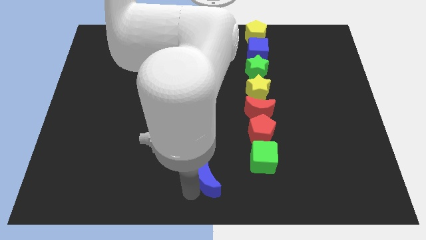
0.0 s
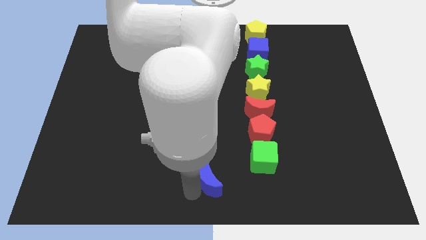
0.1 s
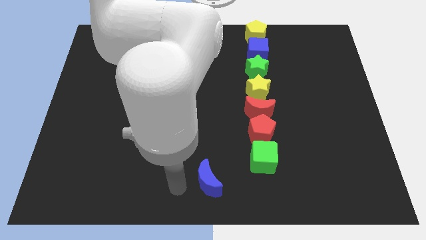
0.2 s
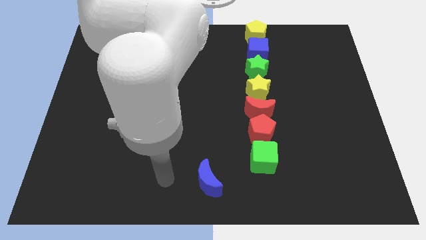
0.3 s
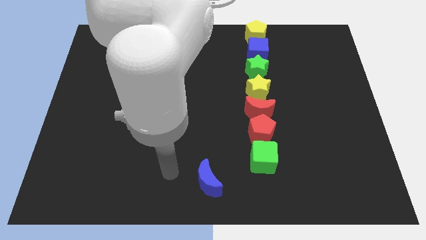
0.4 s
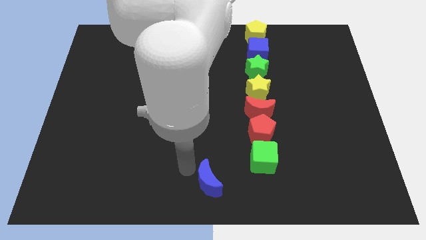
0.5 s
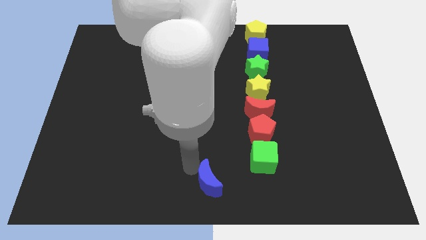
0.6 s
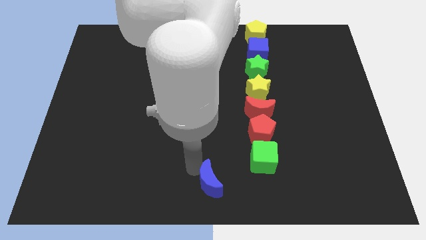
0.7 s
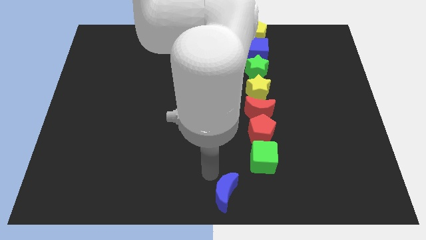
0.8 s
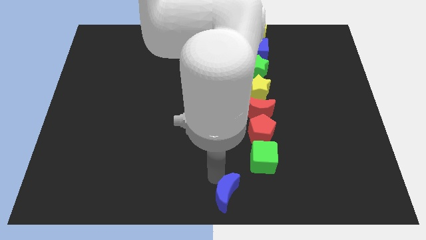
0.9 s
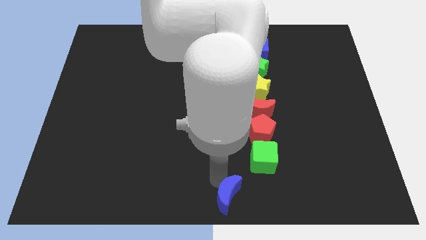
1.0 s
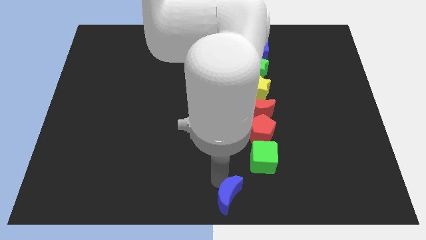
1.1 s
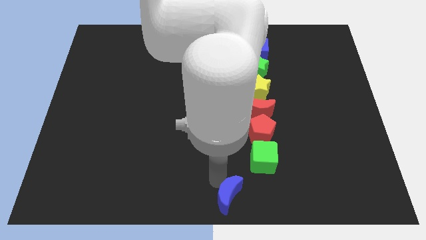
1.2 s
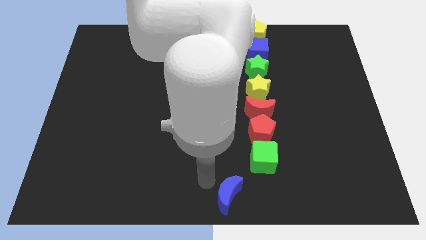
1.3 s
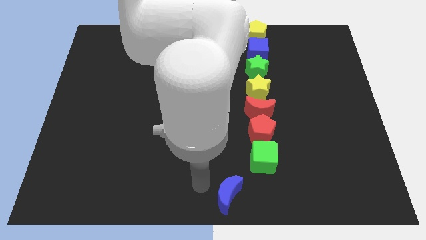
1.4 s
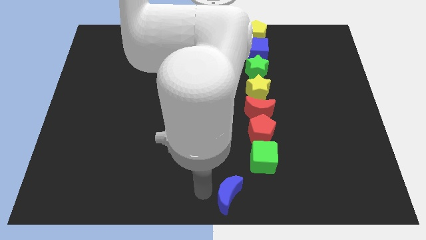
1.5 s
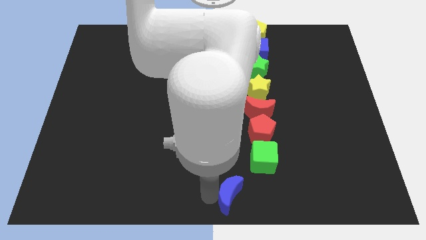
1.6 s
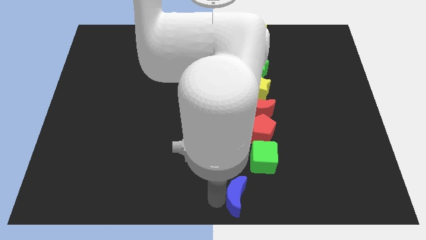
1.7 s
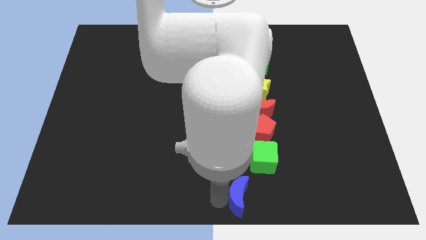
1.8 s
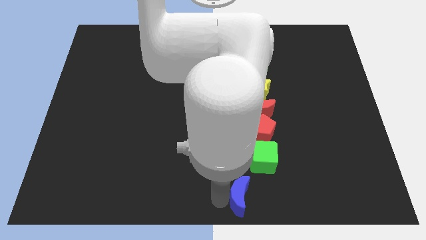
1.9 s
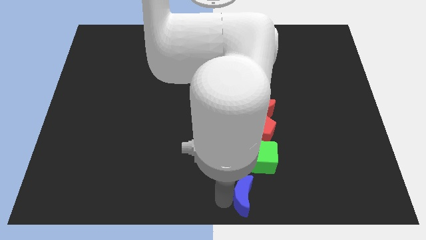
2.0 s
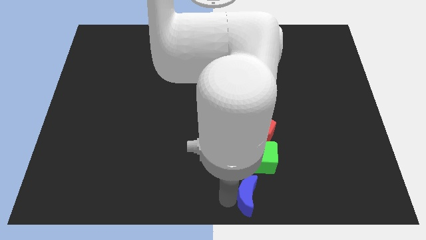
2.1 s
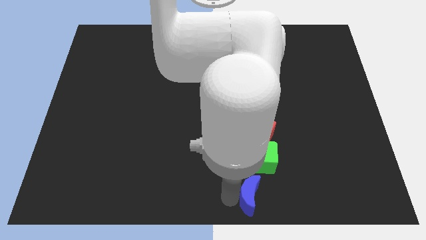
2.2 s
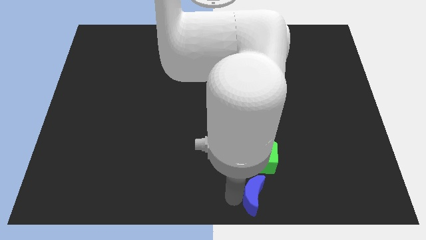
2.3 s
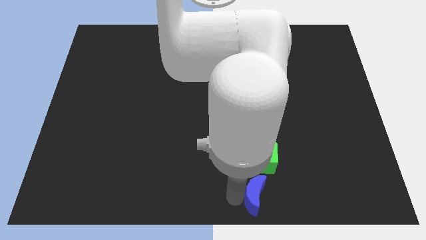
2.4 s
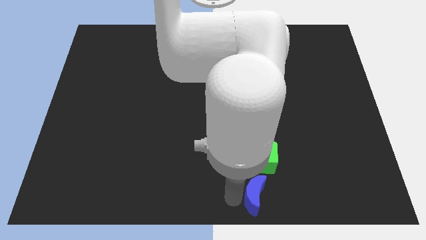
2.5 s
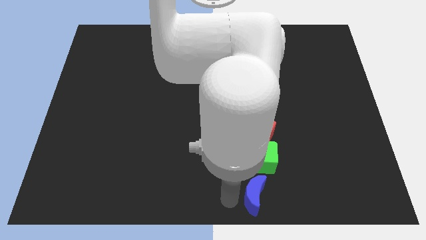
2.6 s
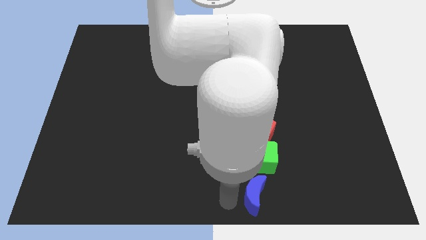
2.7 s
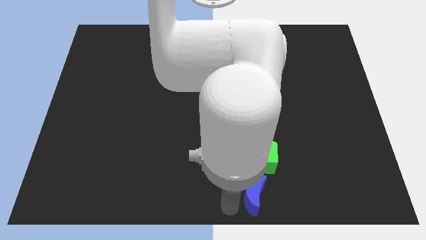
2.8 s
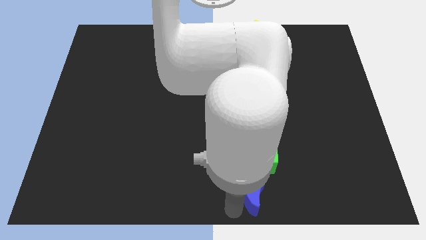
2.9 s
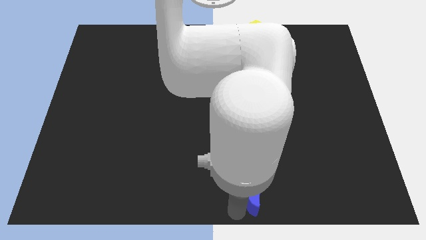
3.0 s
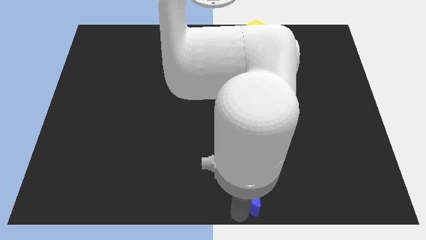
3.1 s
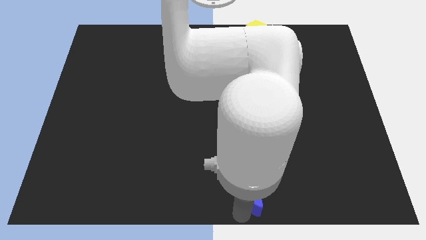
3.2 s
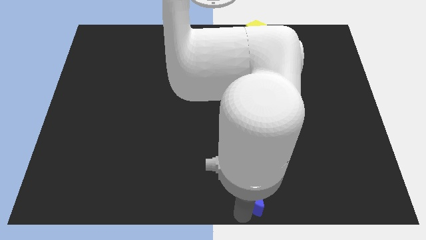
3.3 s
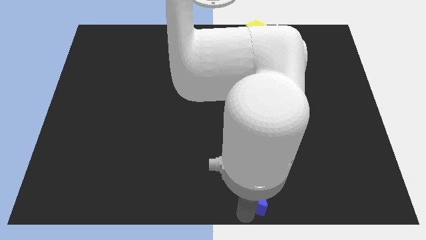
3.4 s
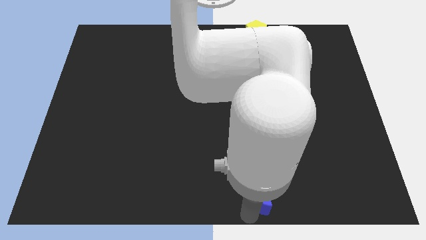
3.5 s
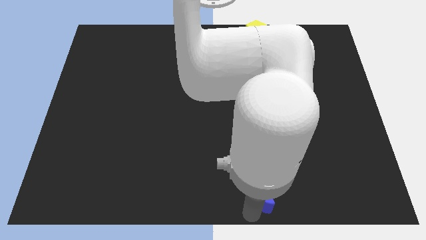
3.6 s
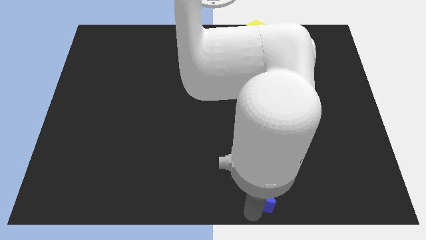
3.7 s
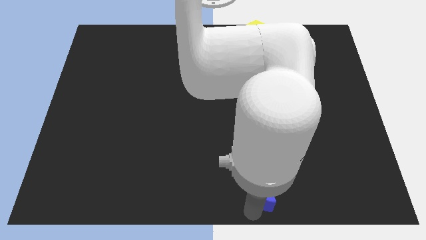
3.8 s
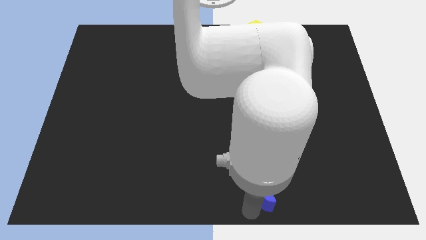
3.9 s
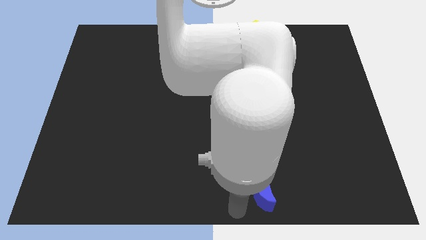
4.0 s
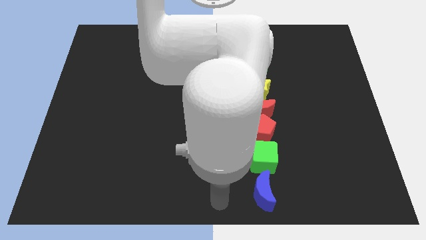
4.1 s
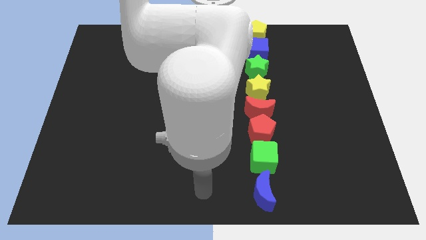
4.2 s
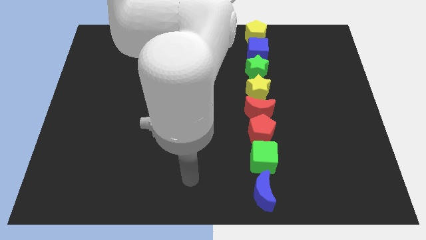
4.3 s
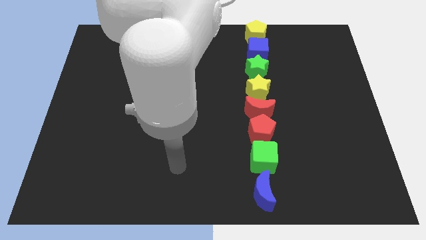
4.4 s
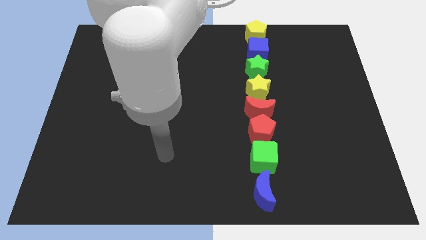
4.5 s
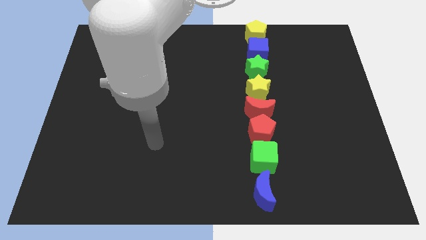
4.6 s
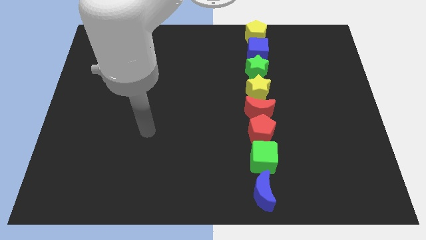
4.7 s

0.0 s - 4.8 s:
move the blue crescent underneath the green cube

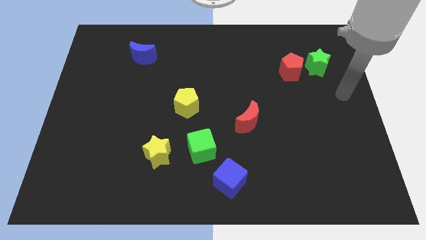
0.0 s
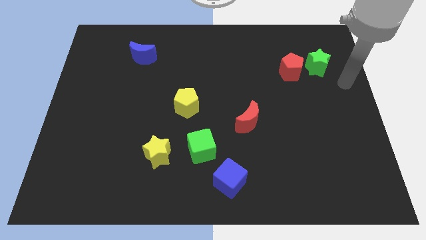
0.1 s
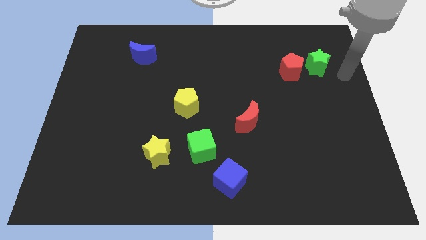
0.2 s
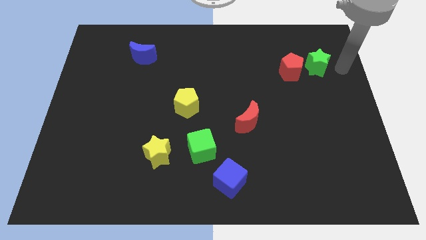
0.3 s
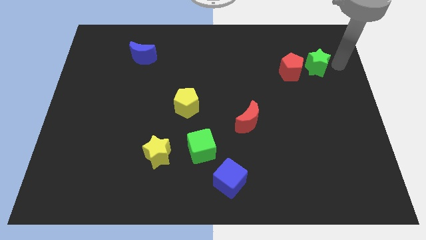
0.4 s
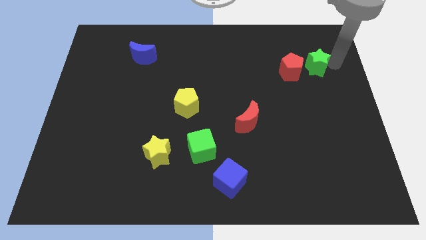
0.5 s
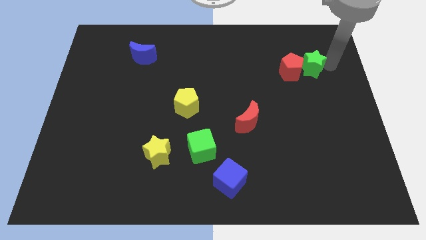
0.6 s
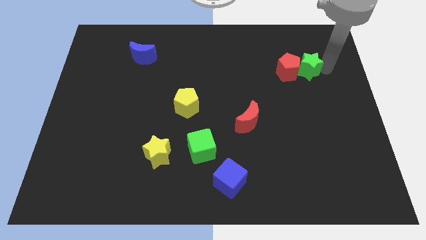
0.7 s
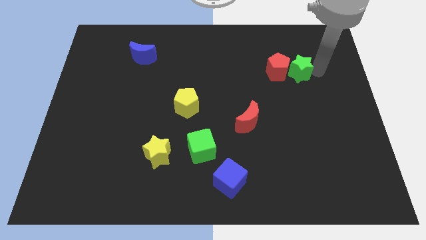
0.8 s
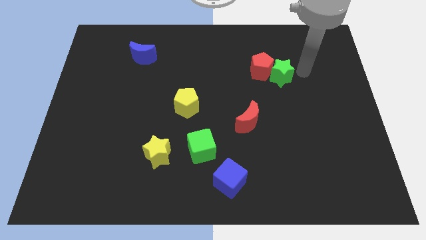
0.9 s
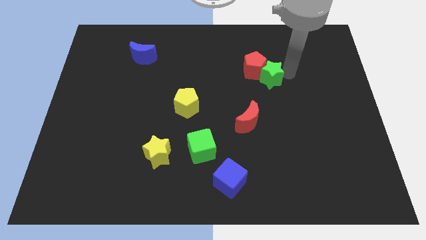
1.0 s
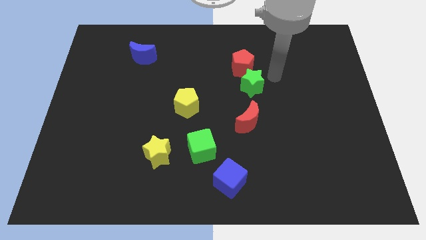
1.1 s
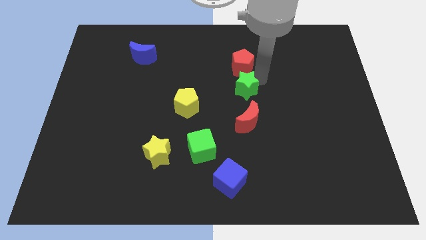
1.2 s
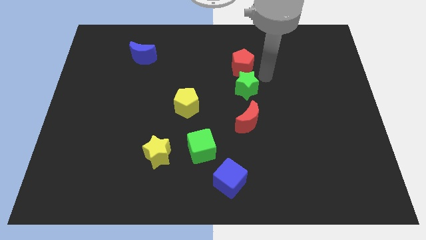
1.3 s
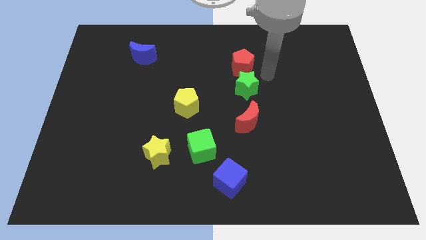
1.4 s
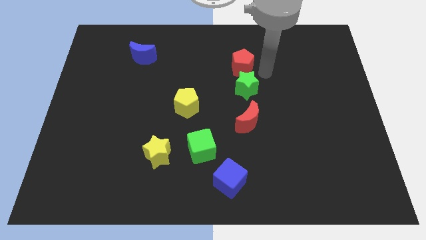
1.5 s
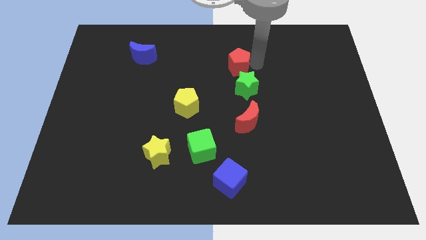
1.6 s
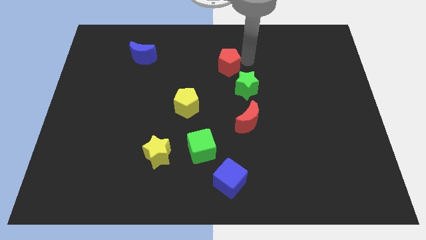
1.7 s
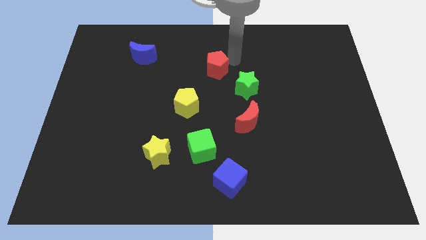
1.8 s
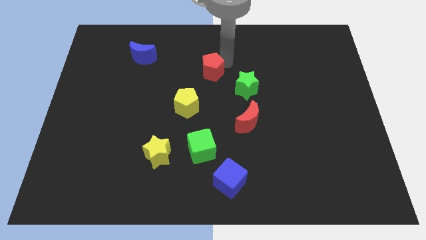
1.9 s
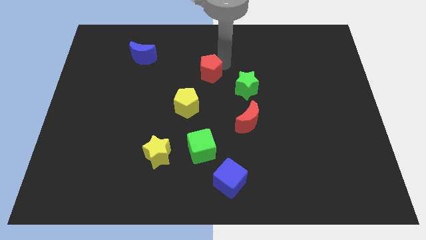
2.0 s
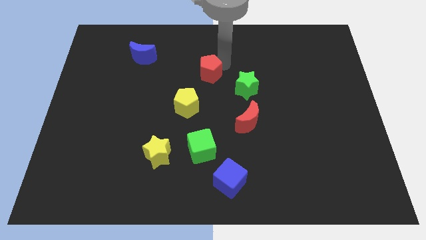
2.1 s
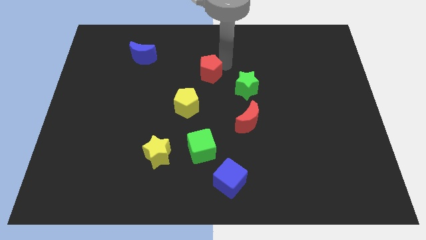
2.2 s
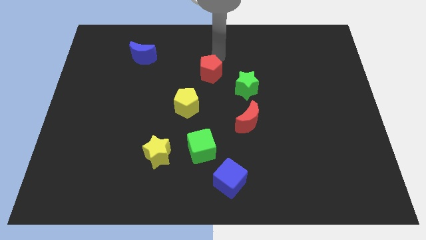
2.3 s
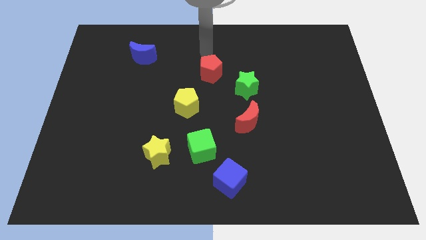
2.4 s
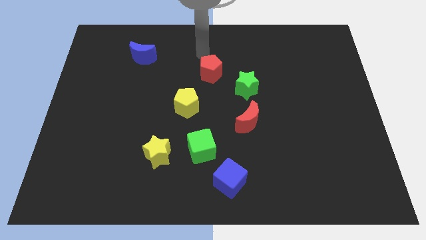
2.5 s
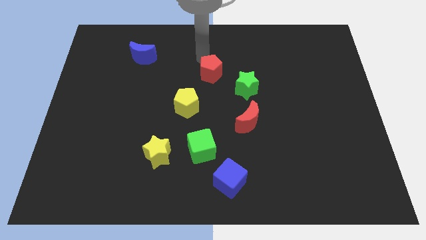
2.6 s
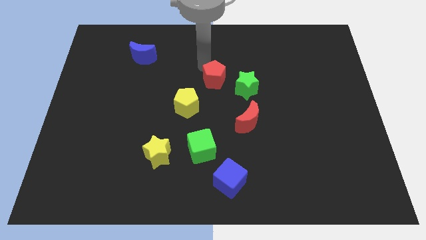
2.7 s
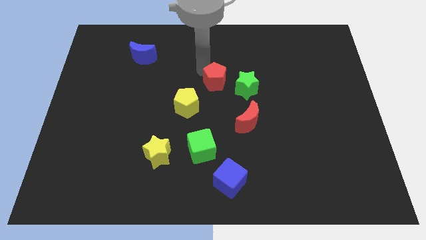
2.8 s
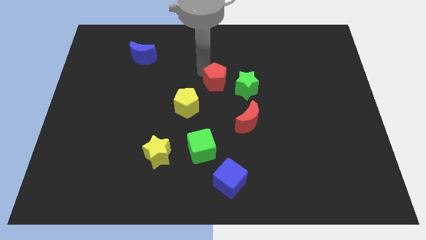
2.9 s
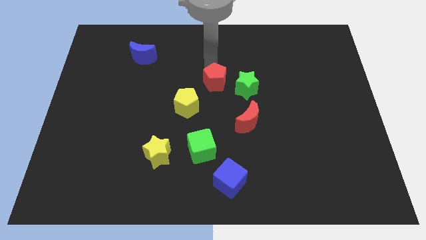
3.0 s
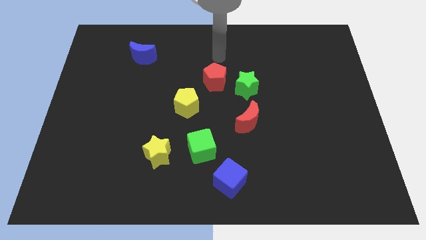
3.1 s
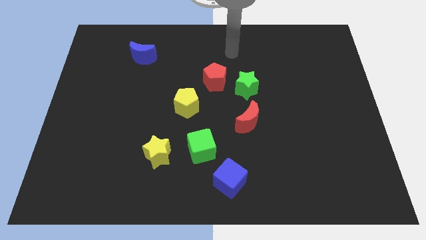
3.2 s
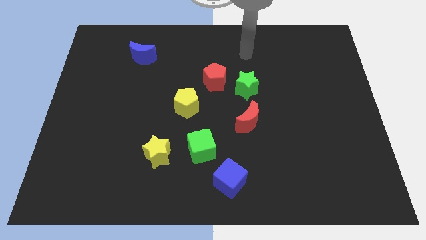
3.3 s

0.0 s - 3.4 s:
move the green star and red pentagon to the center of the board

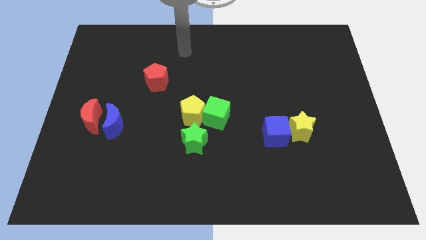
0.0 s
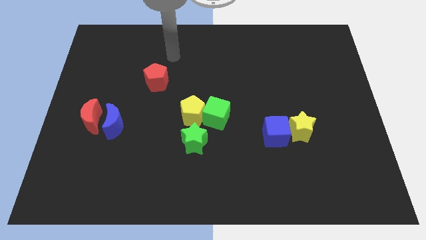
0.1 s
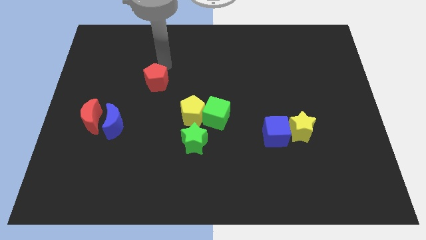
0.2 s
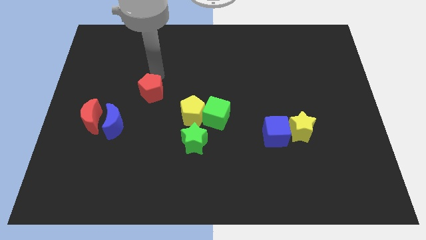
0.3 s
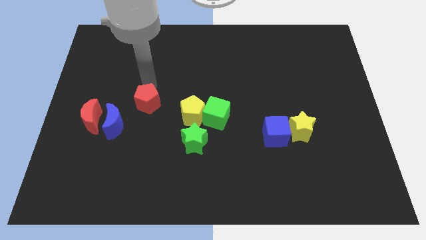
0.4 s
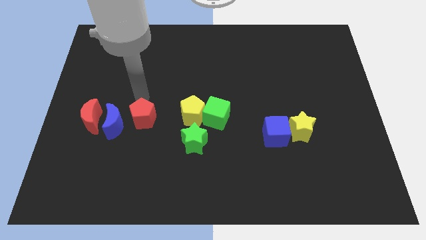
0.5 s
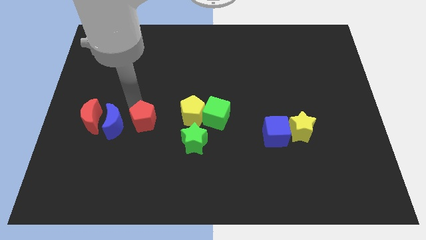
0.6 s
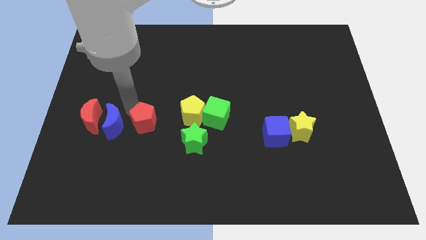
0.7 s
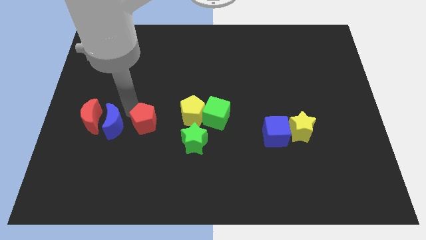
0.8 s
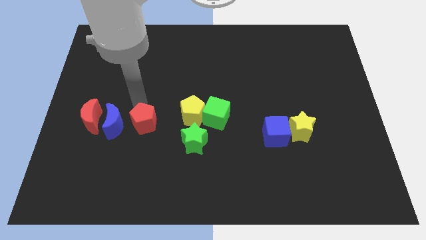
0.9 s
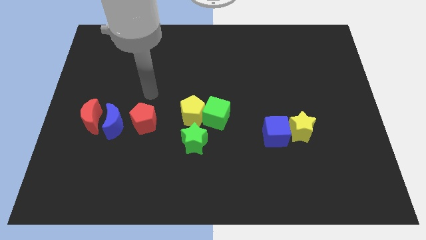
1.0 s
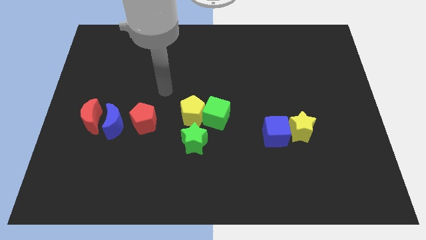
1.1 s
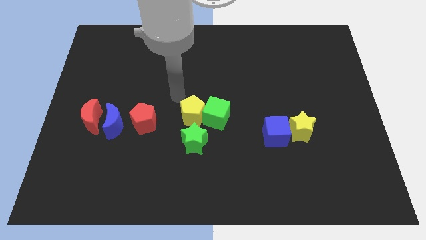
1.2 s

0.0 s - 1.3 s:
drag the red pentagon to the top left of the green star
